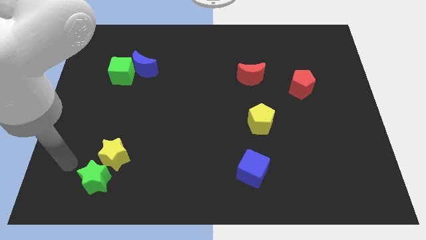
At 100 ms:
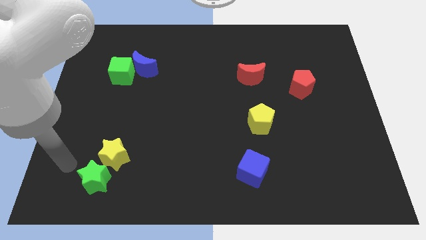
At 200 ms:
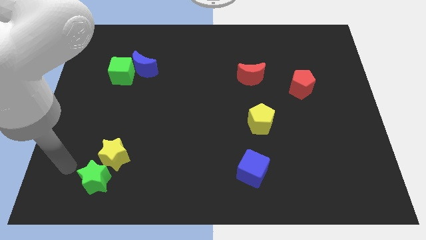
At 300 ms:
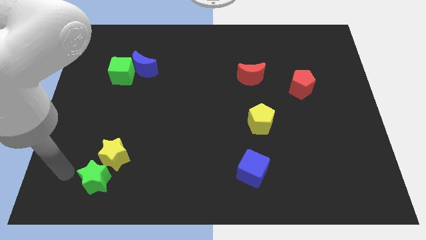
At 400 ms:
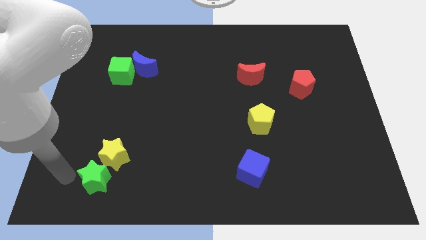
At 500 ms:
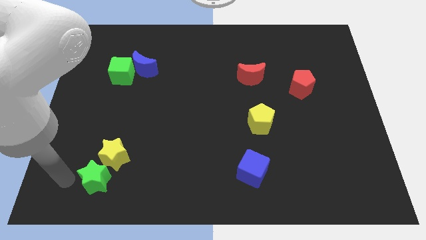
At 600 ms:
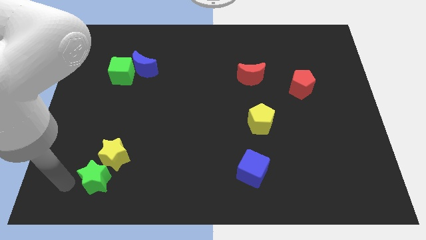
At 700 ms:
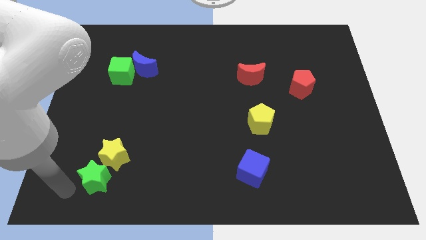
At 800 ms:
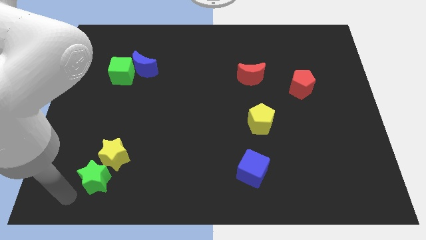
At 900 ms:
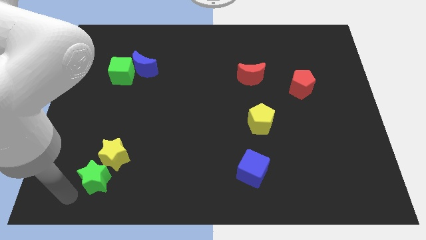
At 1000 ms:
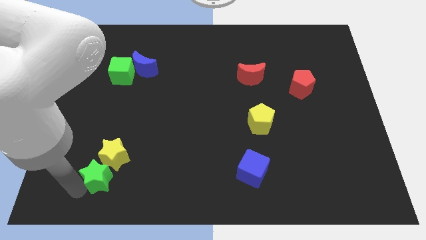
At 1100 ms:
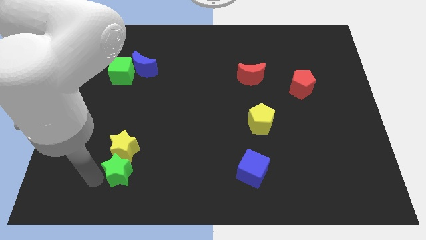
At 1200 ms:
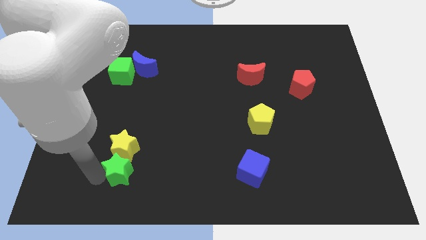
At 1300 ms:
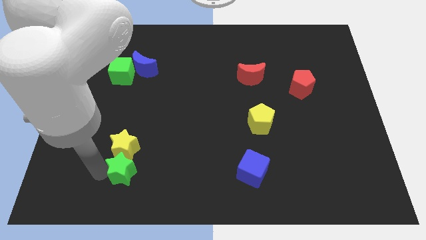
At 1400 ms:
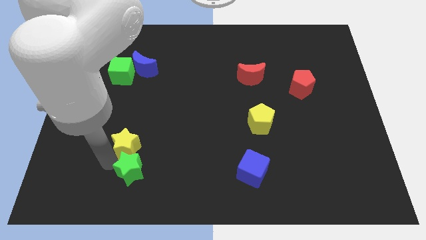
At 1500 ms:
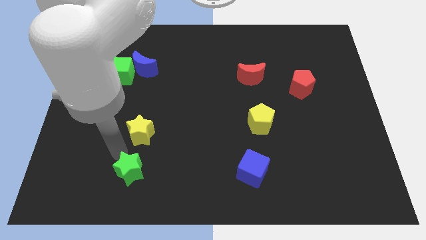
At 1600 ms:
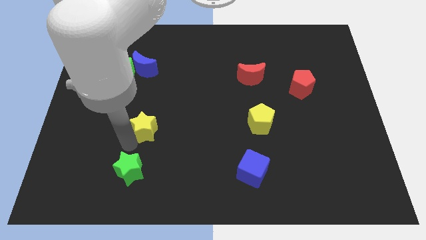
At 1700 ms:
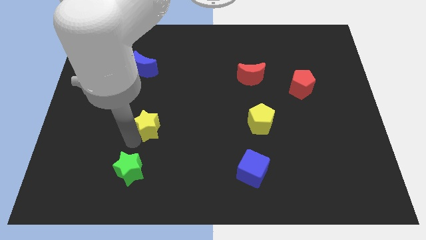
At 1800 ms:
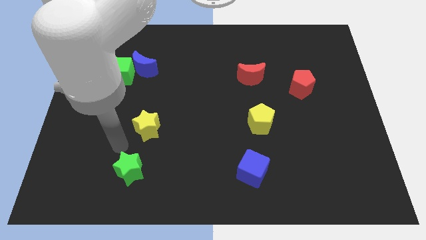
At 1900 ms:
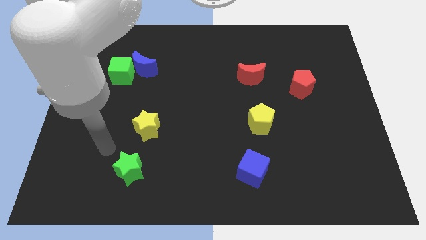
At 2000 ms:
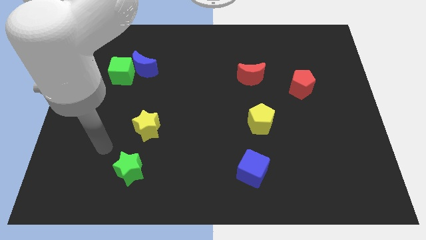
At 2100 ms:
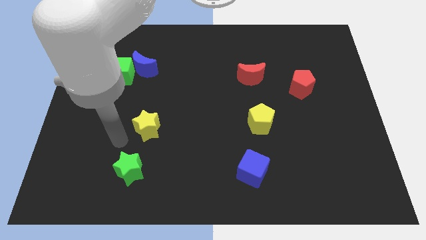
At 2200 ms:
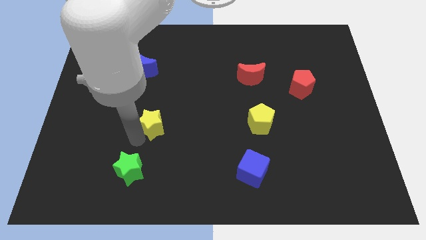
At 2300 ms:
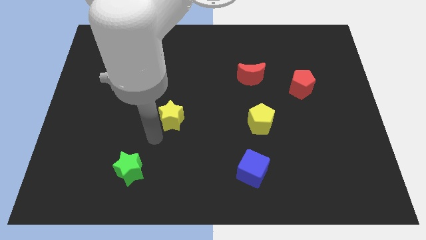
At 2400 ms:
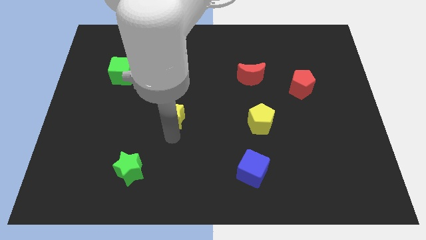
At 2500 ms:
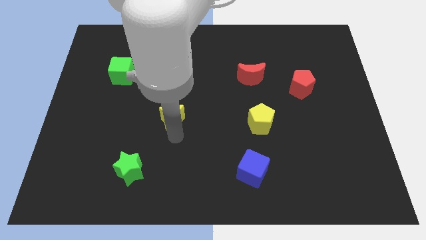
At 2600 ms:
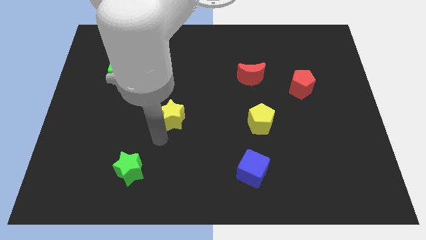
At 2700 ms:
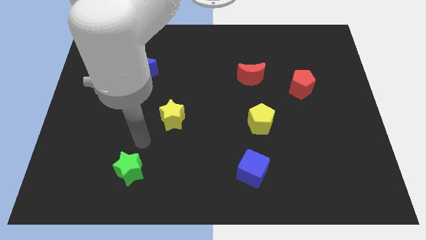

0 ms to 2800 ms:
put the yellow star parallel to the yellow pentagon

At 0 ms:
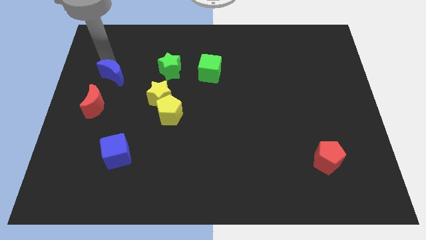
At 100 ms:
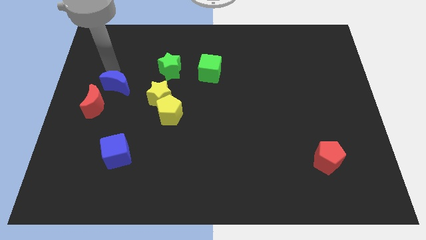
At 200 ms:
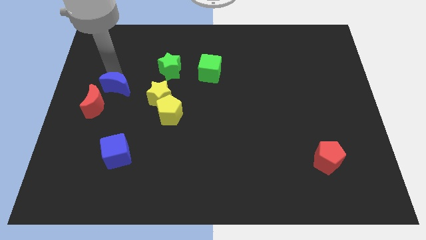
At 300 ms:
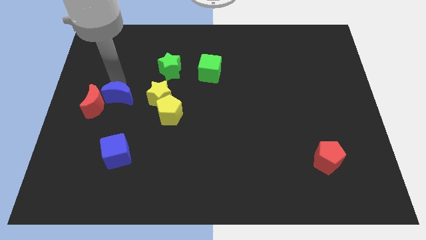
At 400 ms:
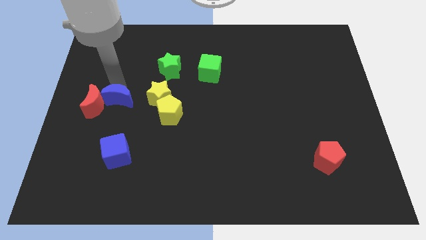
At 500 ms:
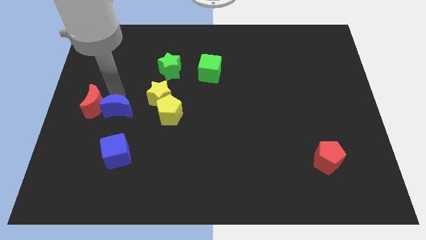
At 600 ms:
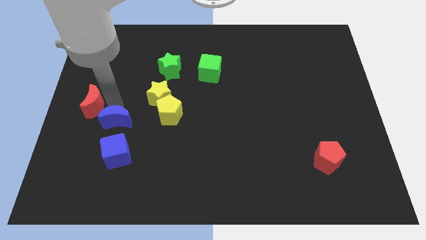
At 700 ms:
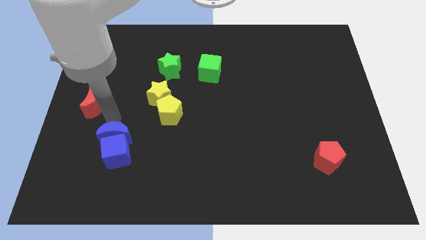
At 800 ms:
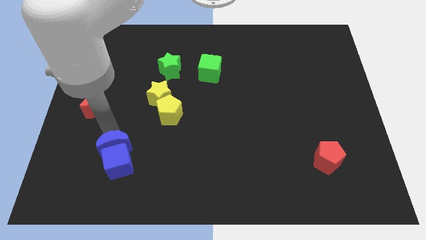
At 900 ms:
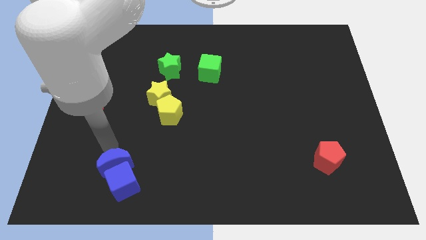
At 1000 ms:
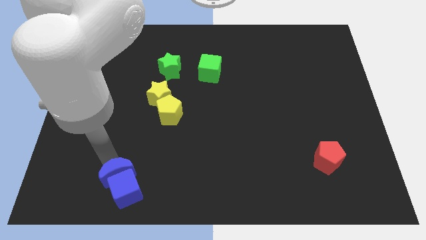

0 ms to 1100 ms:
move blue moon into the blue cube

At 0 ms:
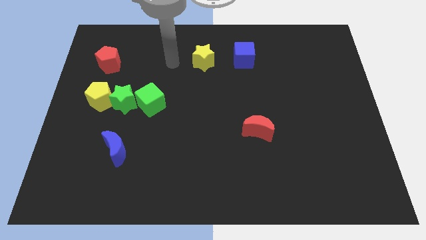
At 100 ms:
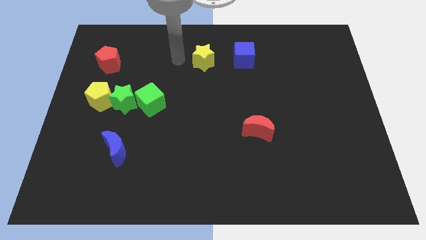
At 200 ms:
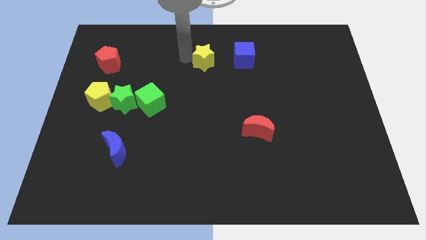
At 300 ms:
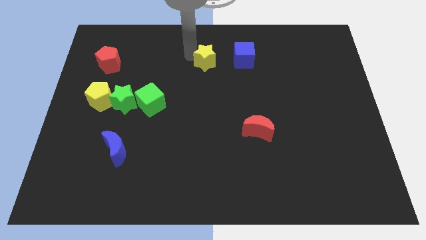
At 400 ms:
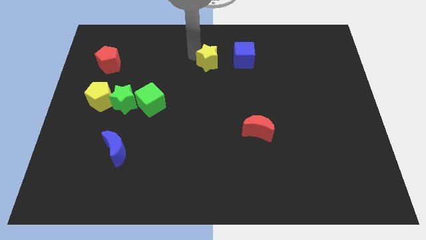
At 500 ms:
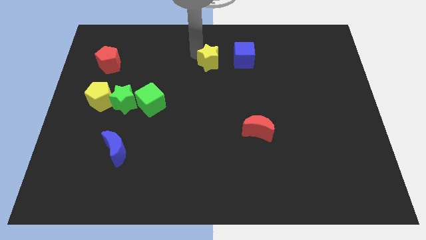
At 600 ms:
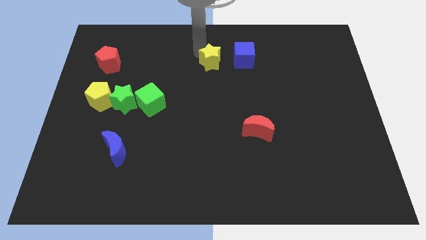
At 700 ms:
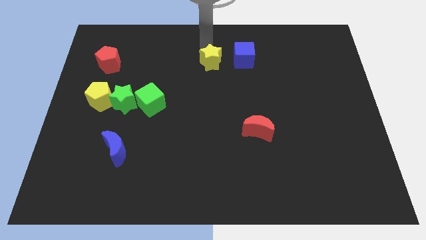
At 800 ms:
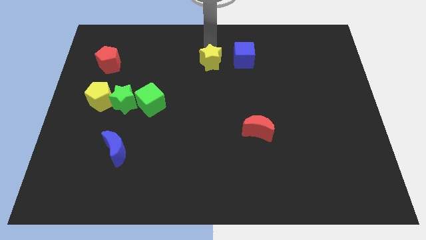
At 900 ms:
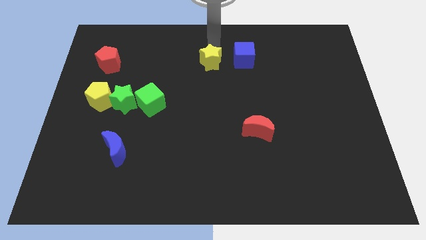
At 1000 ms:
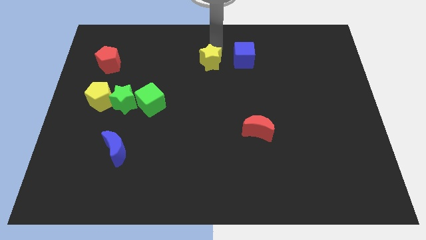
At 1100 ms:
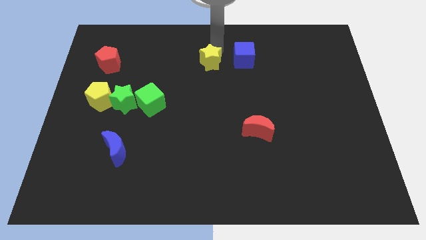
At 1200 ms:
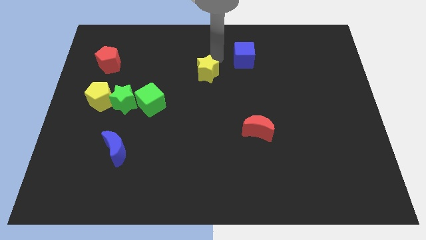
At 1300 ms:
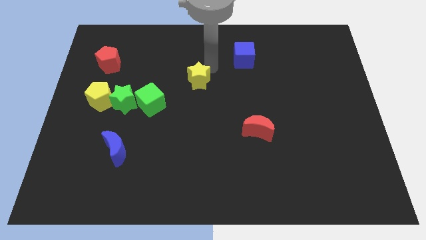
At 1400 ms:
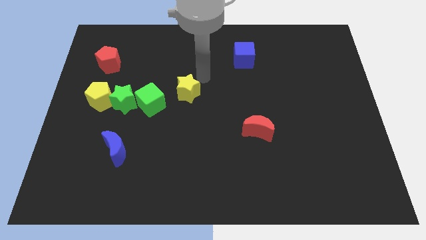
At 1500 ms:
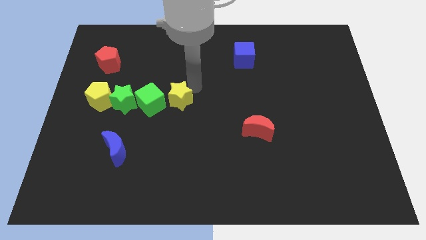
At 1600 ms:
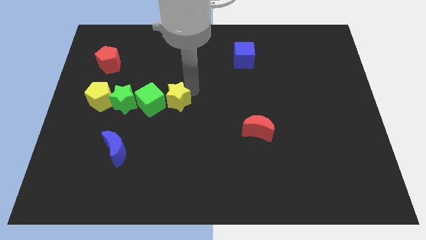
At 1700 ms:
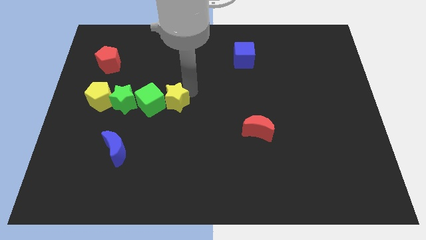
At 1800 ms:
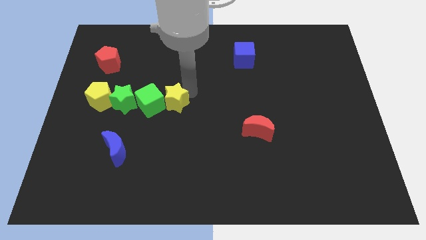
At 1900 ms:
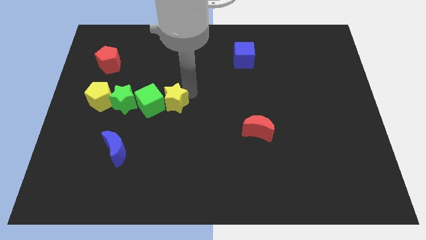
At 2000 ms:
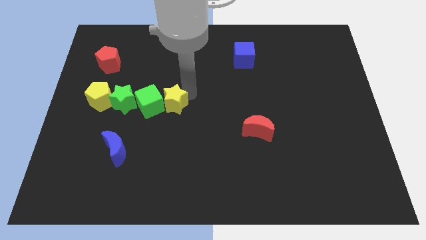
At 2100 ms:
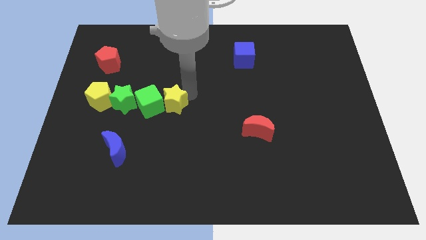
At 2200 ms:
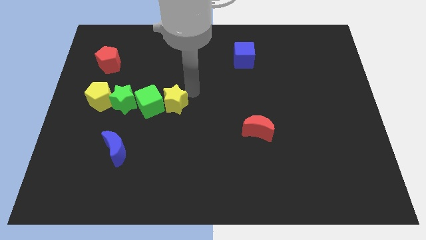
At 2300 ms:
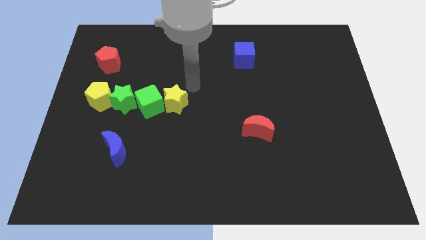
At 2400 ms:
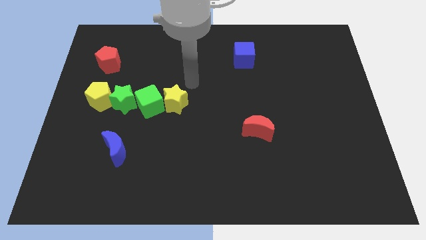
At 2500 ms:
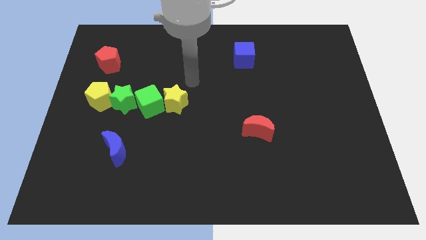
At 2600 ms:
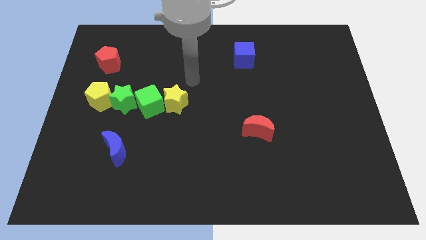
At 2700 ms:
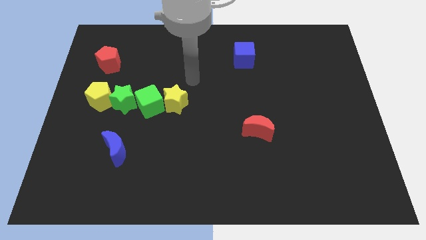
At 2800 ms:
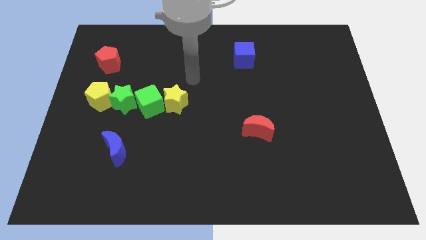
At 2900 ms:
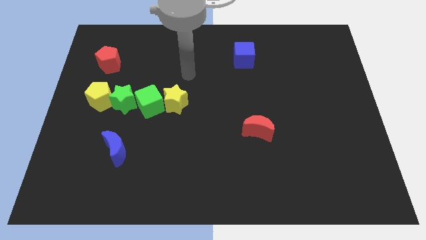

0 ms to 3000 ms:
move the yellow star near to the green cube

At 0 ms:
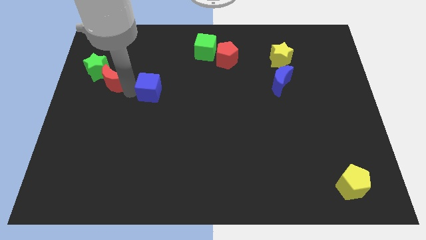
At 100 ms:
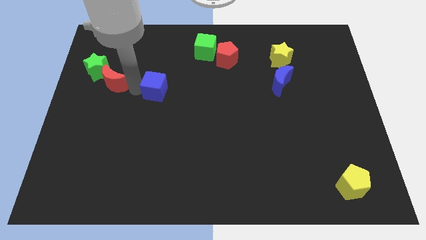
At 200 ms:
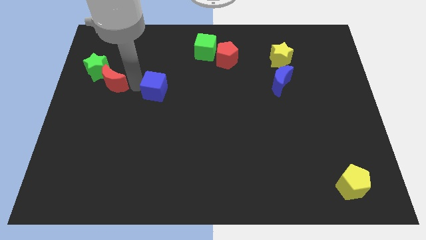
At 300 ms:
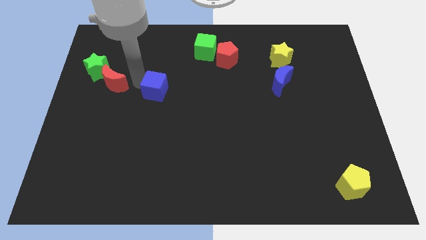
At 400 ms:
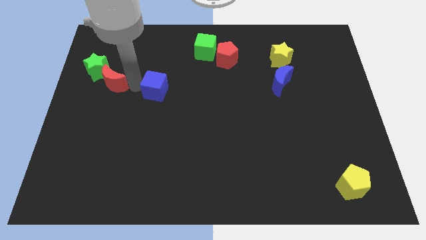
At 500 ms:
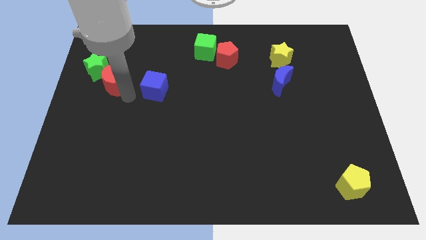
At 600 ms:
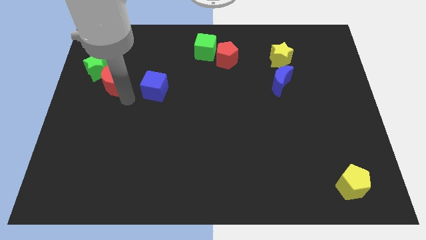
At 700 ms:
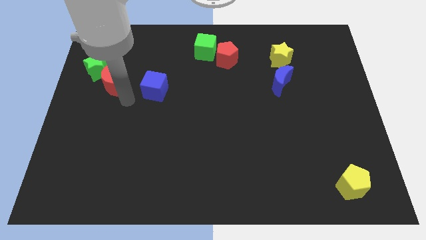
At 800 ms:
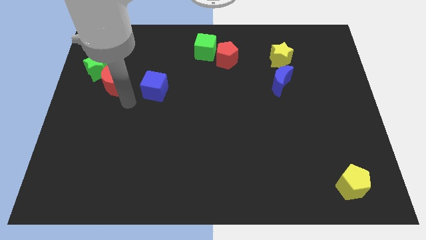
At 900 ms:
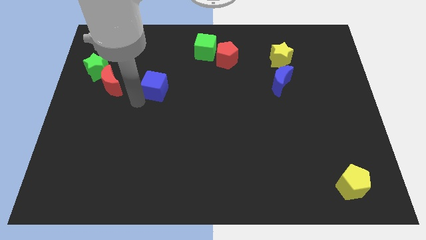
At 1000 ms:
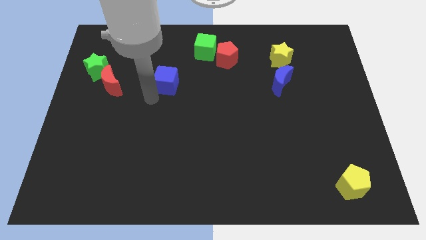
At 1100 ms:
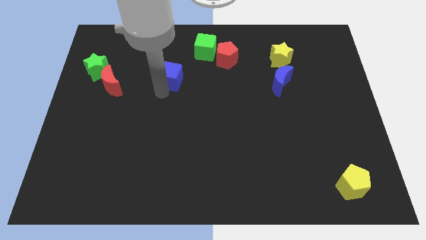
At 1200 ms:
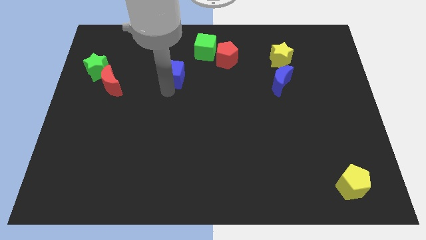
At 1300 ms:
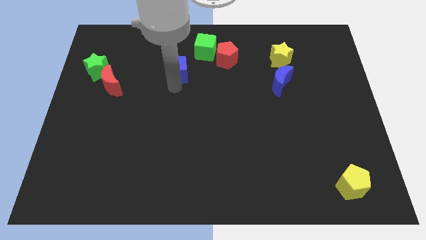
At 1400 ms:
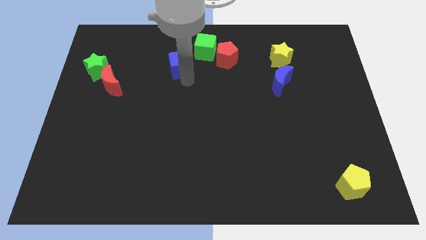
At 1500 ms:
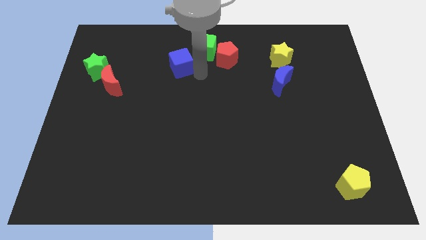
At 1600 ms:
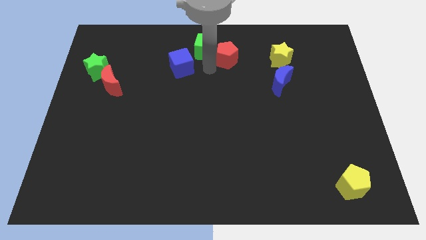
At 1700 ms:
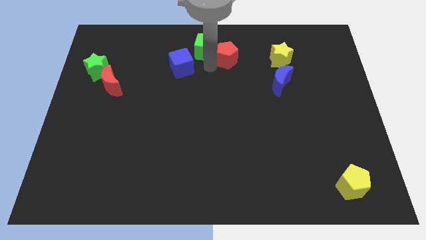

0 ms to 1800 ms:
move the blue cube towards the green cube to the top center of the board

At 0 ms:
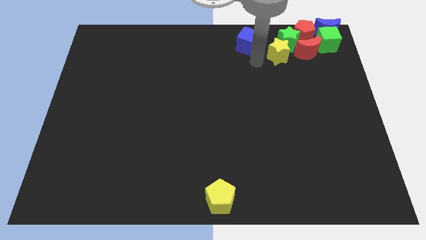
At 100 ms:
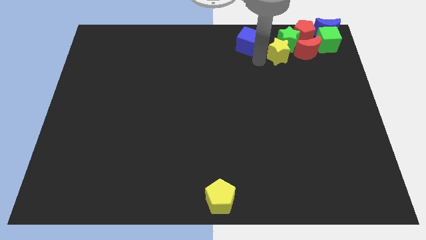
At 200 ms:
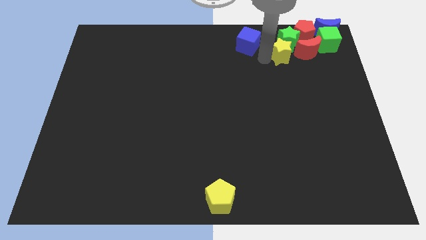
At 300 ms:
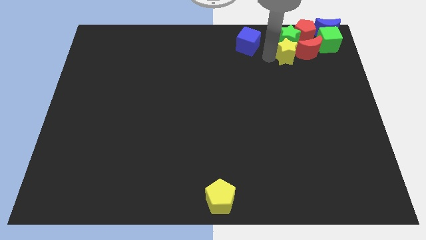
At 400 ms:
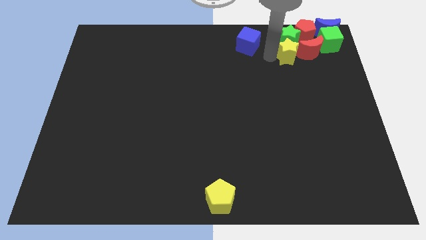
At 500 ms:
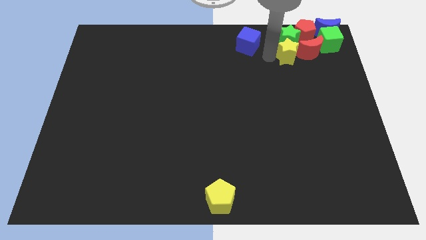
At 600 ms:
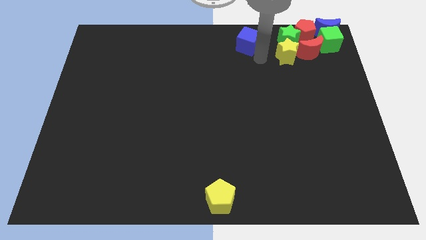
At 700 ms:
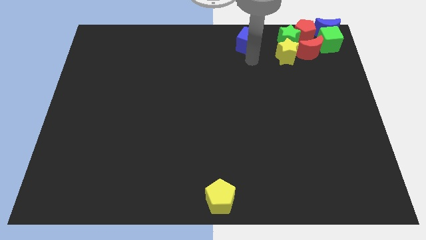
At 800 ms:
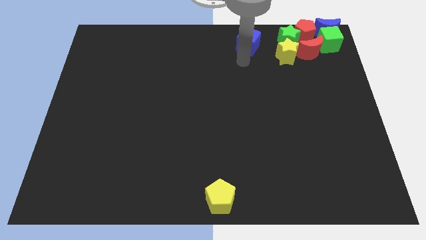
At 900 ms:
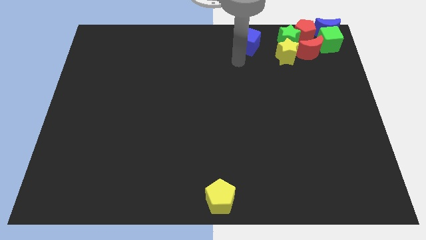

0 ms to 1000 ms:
place yellow star below the green star
